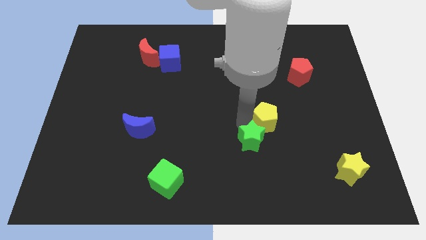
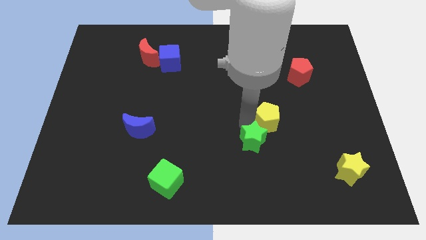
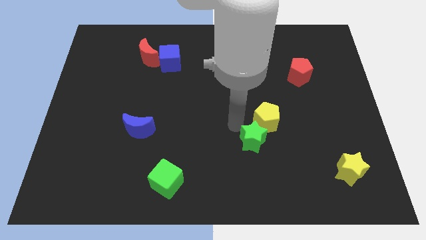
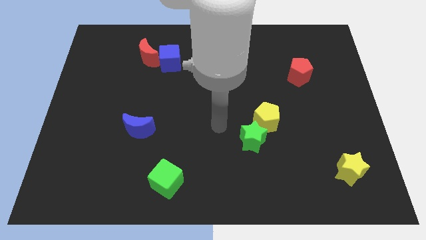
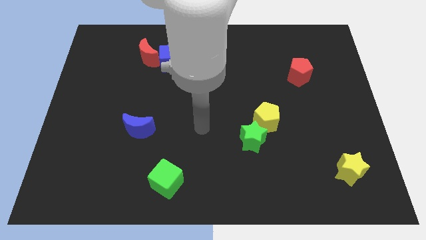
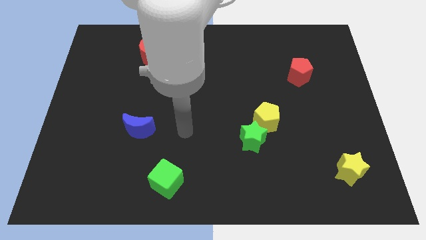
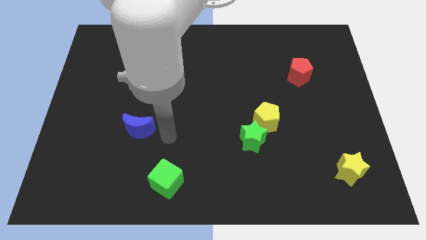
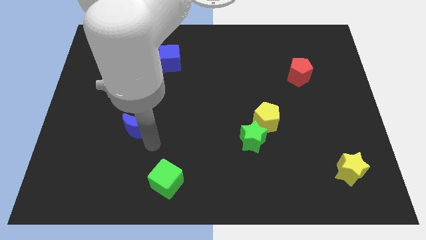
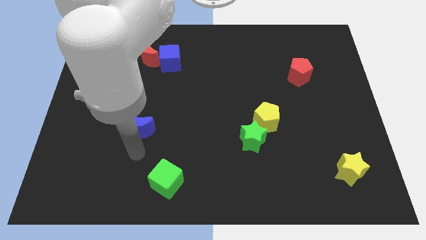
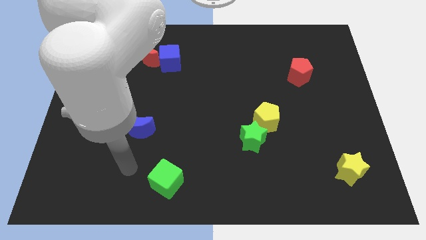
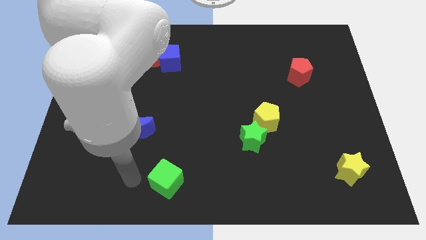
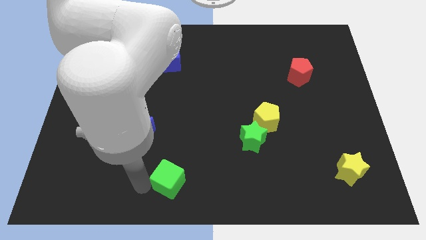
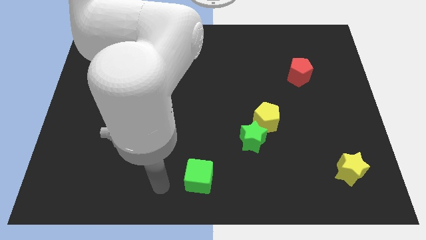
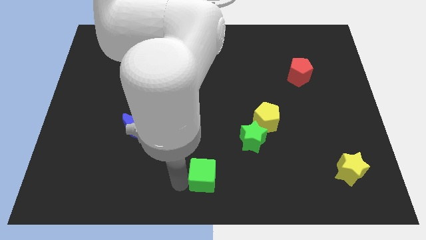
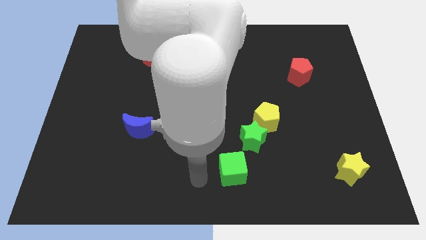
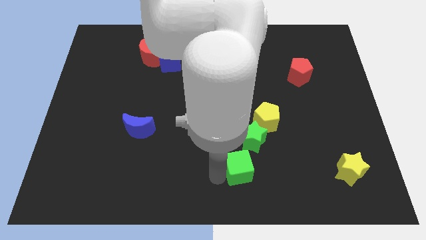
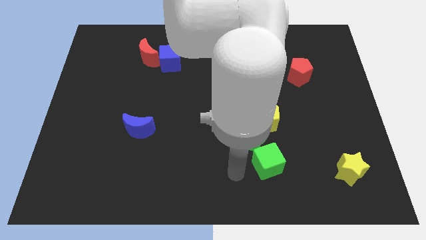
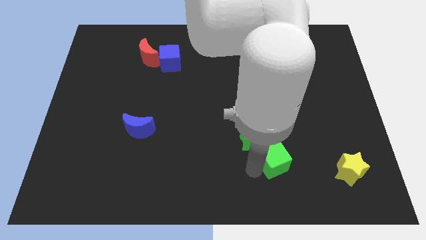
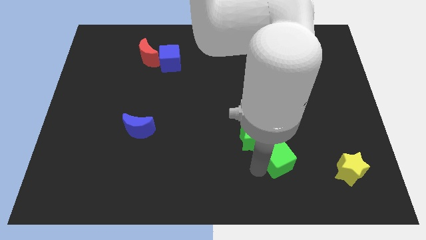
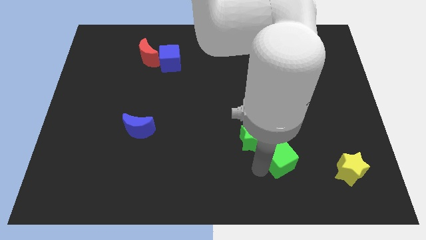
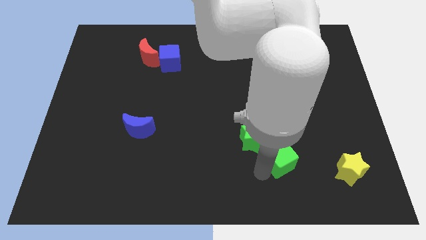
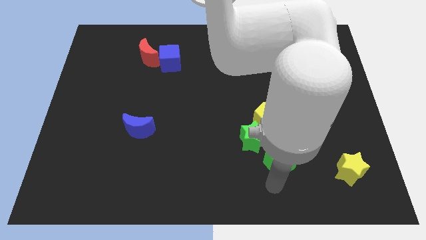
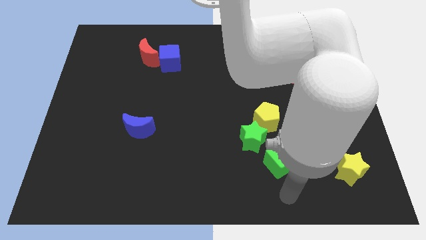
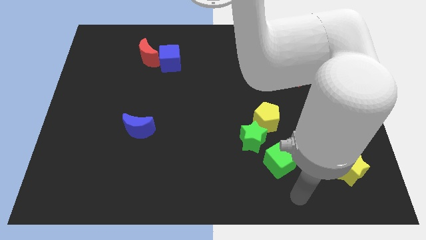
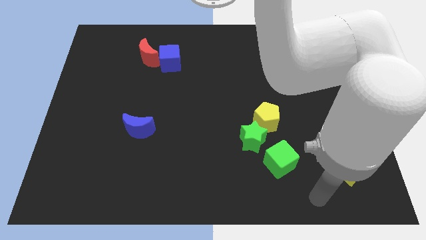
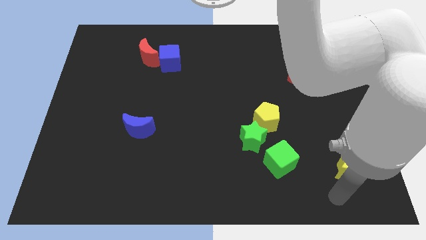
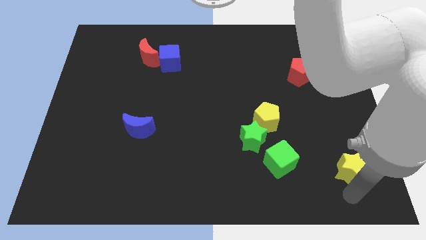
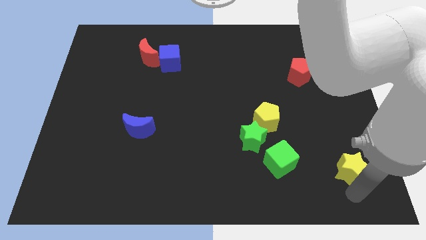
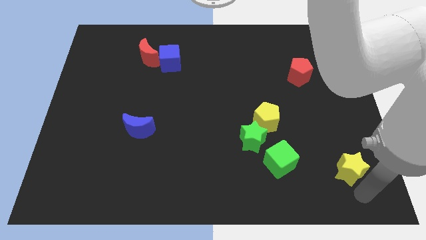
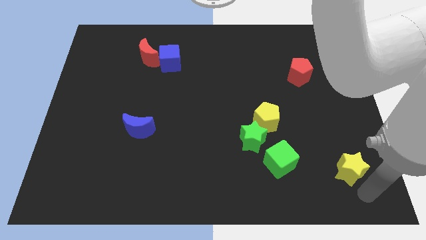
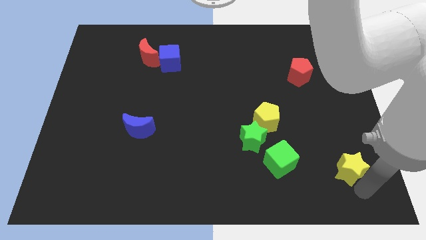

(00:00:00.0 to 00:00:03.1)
slide the green cube diagonally to the bottom right of the green star

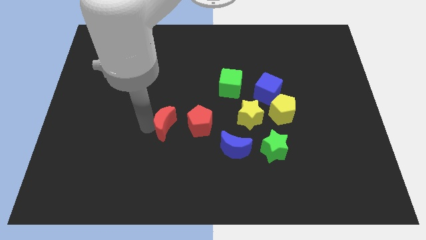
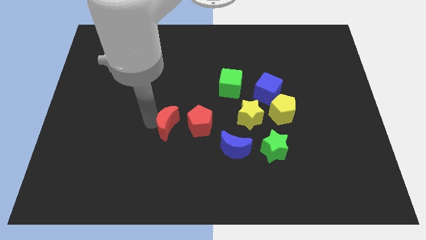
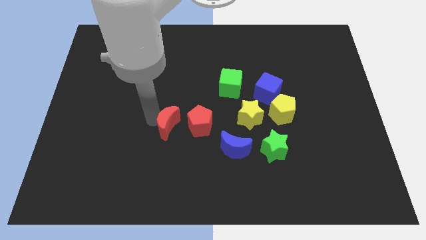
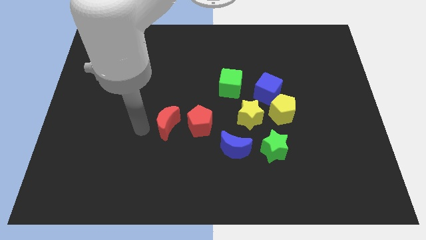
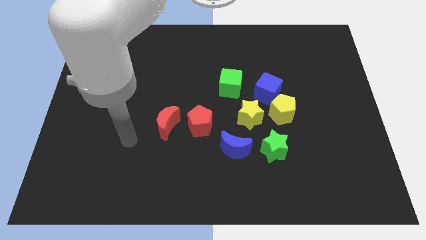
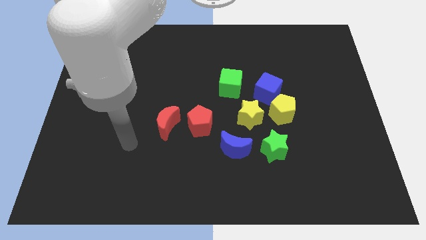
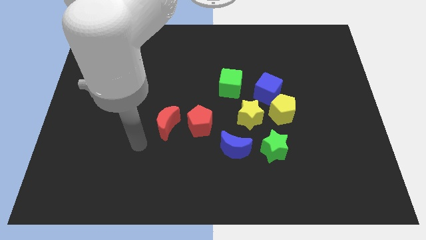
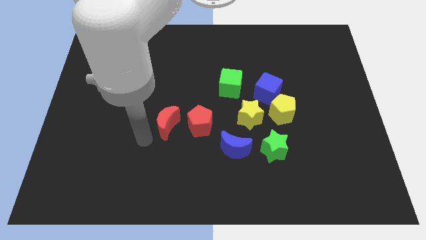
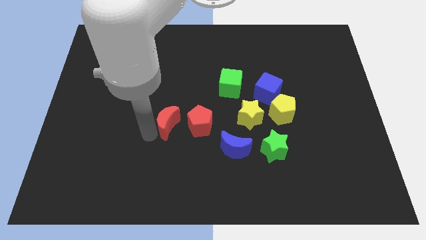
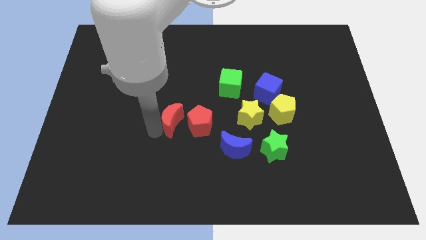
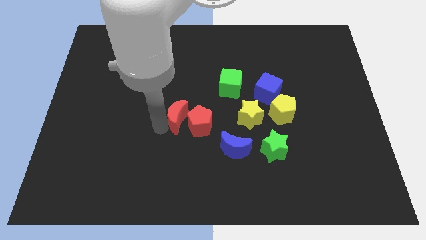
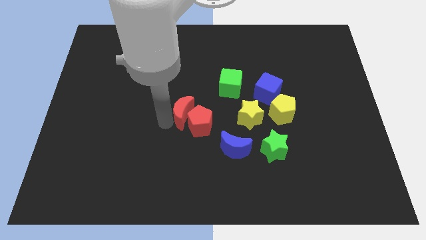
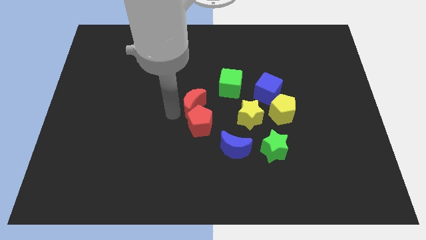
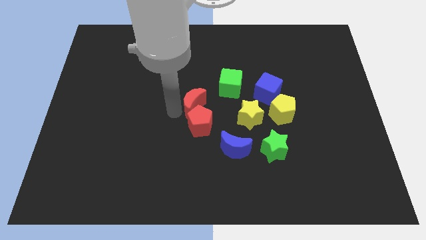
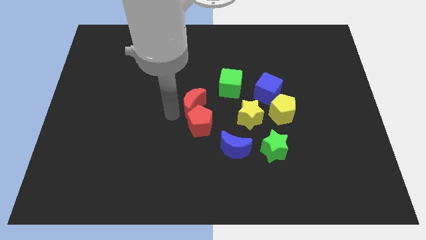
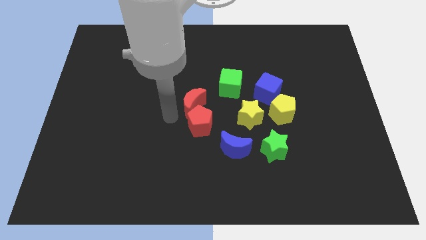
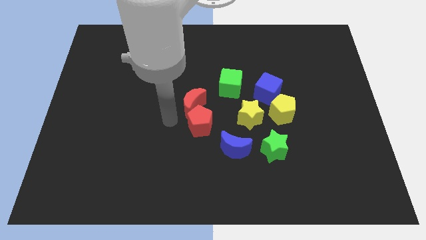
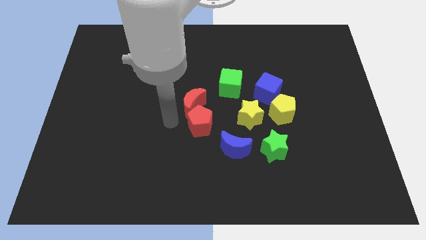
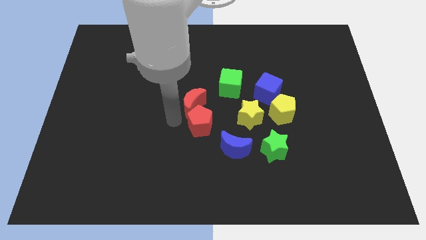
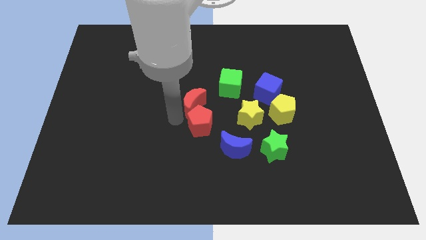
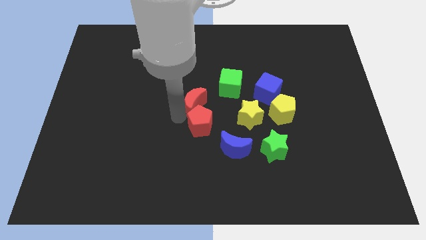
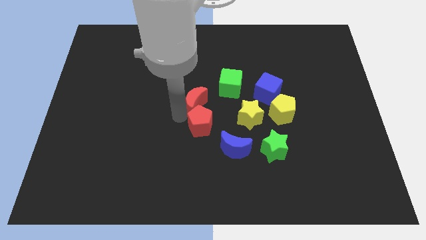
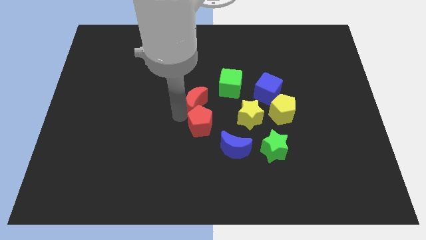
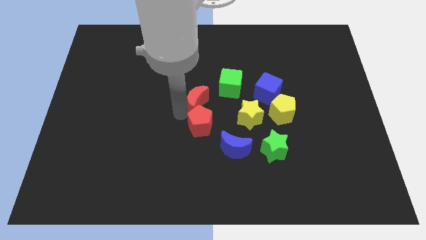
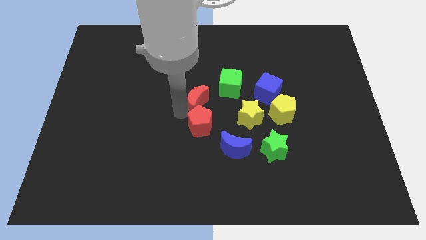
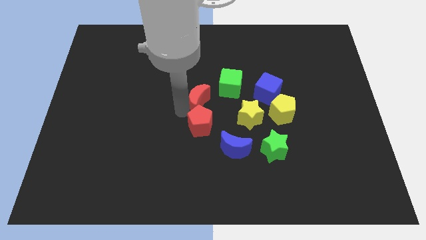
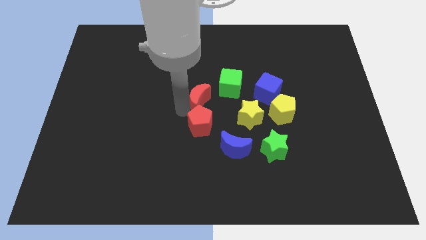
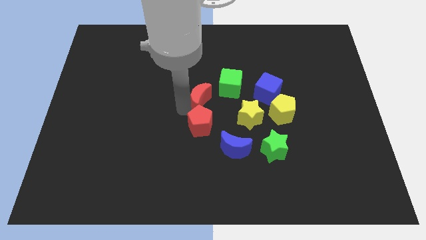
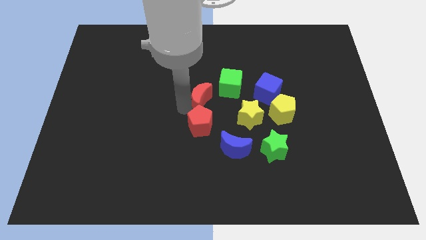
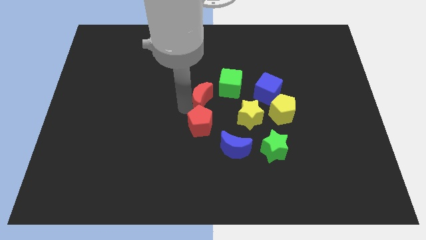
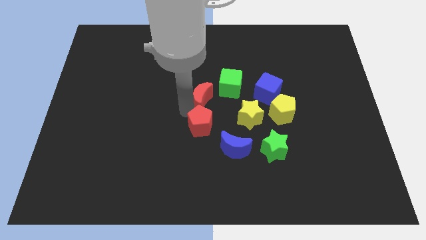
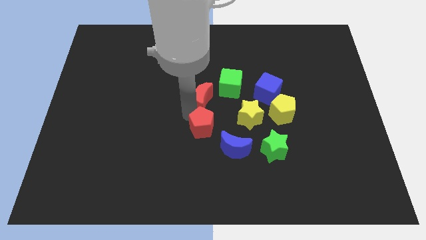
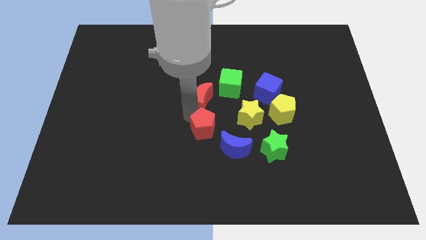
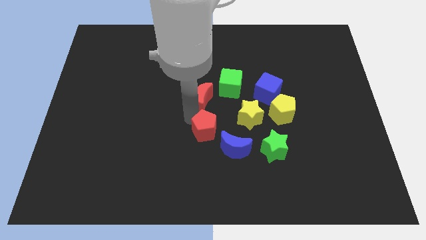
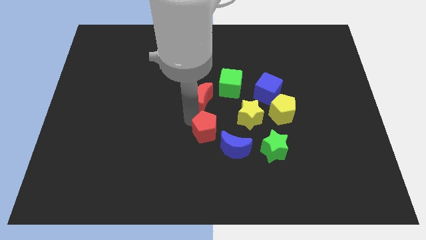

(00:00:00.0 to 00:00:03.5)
push red moon between red pentagon and green cube

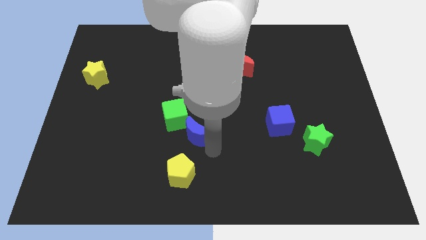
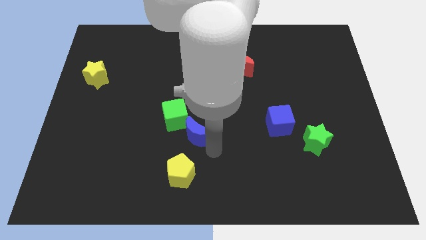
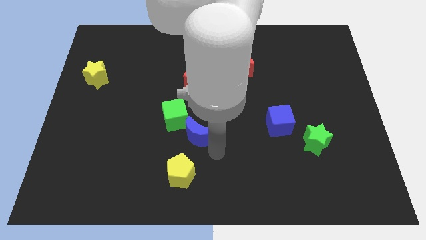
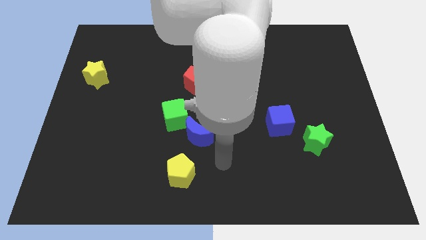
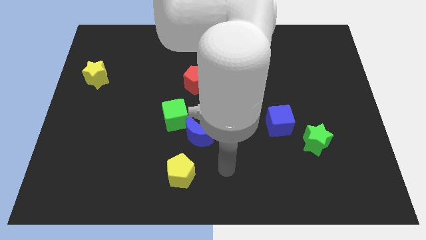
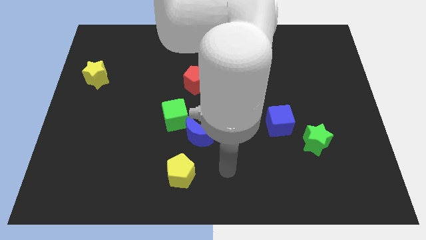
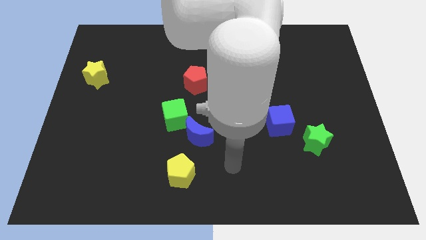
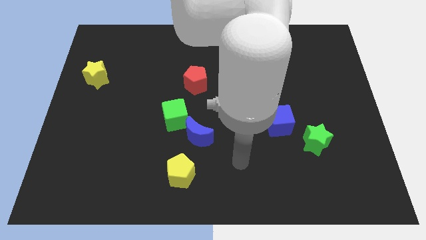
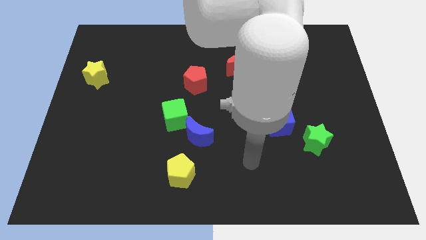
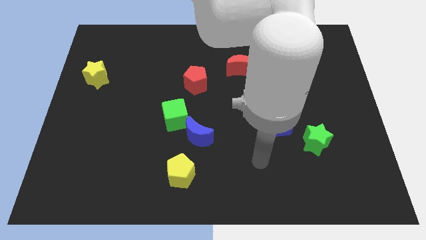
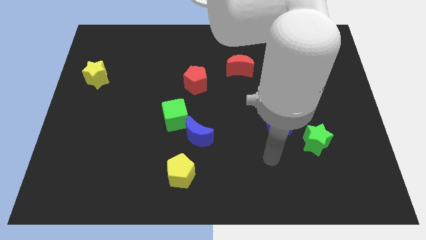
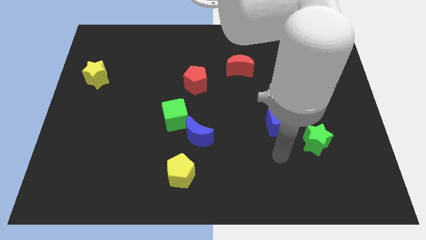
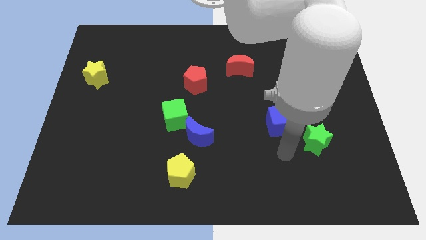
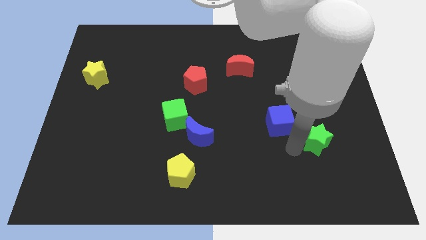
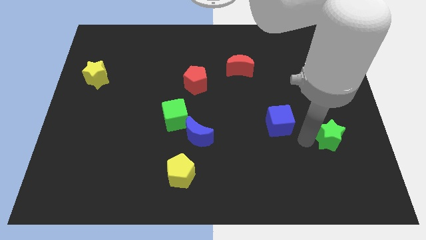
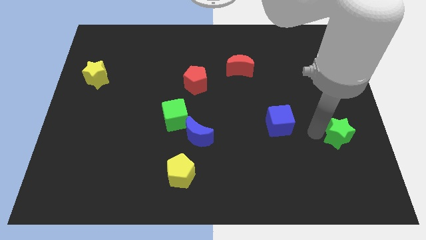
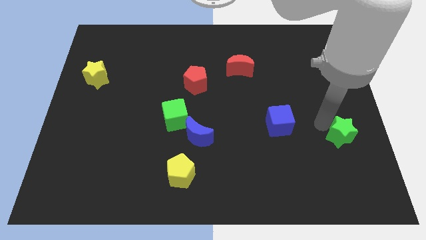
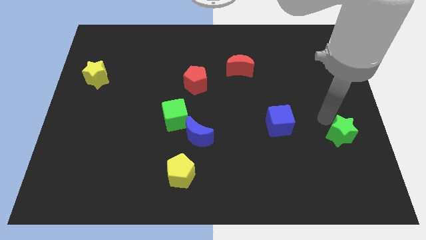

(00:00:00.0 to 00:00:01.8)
slightly push the green star towards the right side of the board

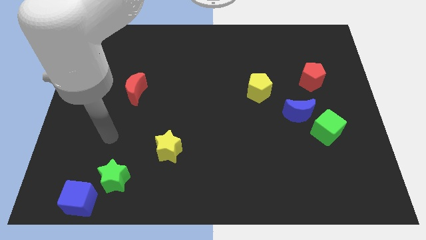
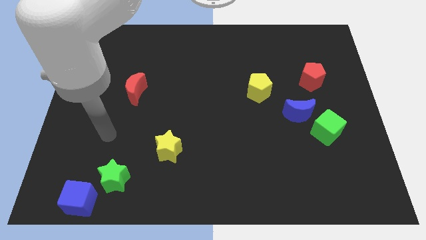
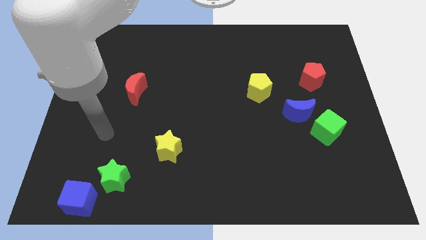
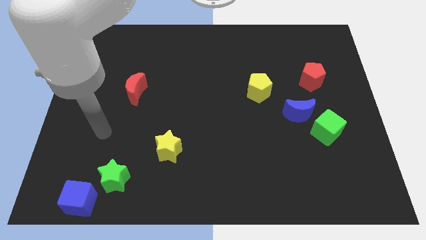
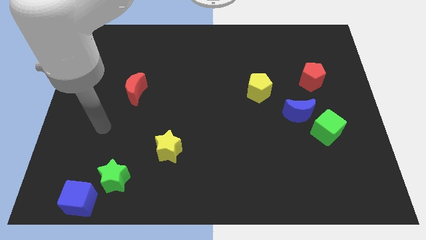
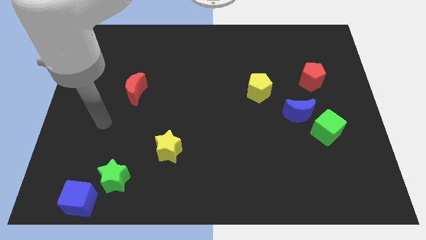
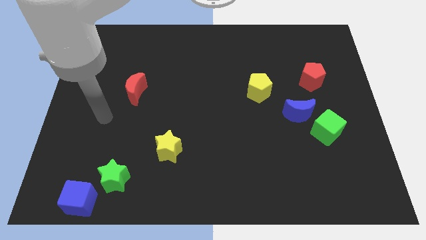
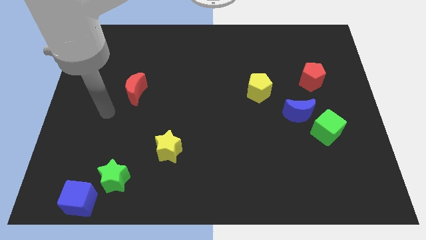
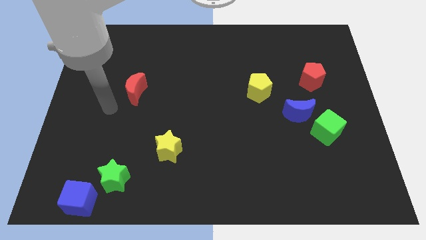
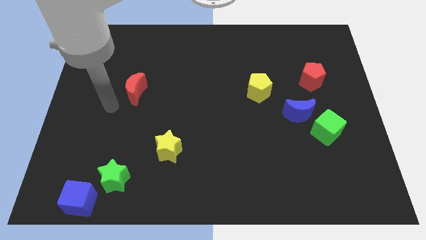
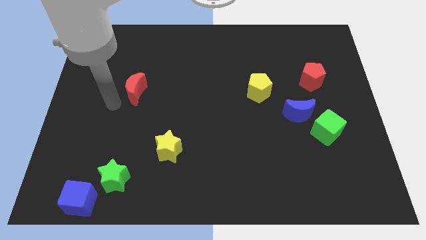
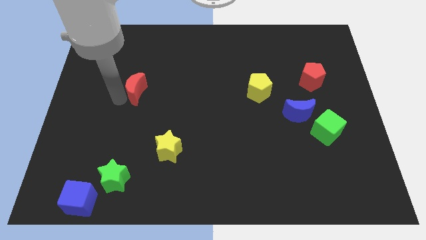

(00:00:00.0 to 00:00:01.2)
point your arm to the left side of red moon
